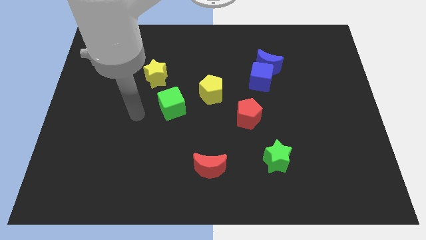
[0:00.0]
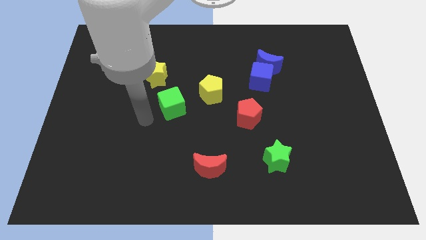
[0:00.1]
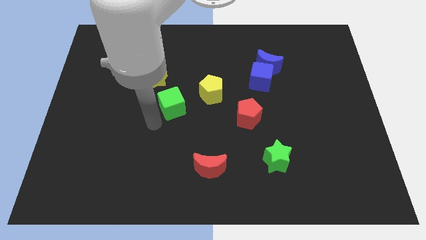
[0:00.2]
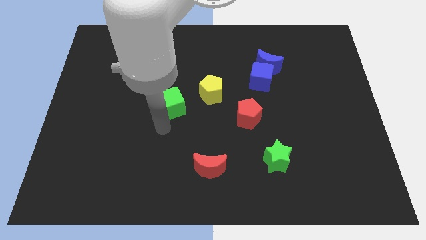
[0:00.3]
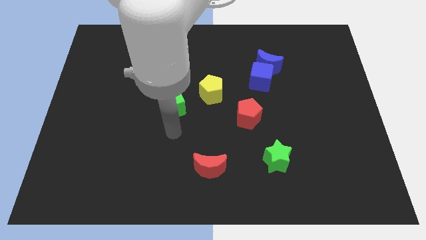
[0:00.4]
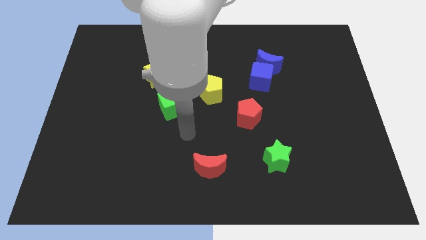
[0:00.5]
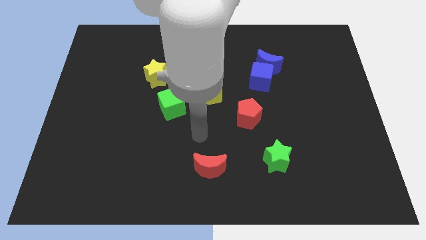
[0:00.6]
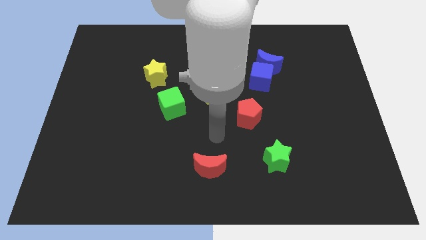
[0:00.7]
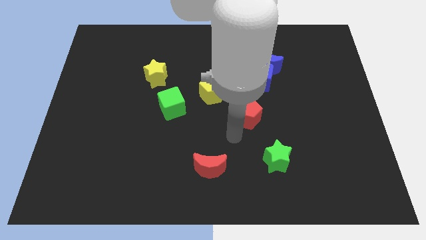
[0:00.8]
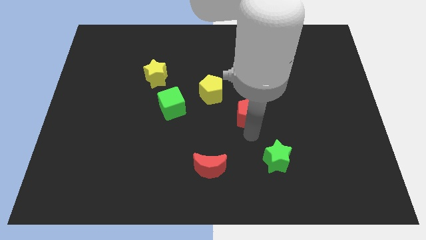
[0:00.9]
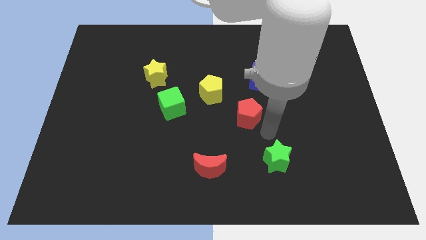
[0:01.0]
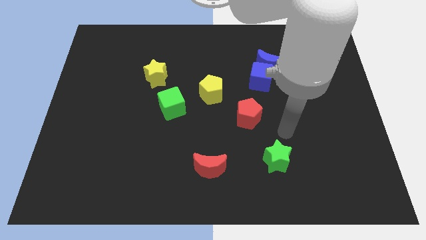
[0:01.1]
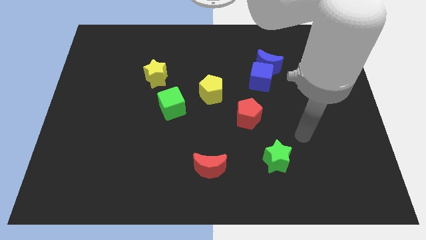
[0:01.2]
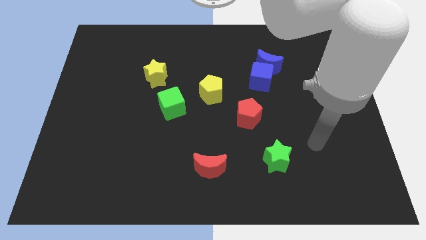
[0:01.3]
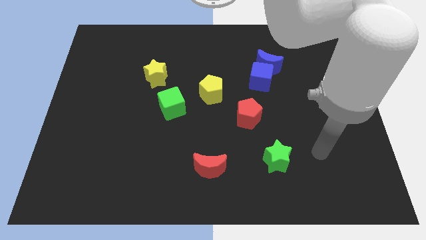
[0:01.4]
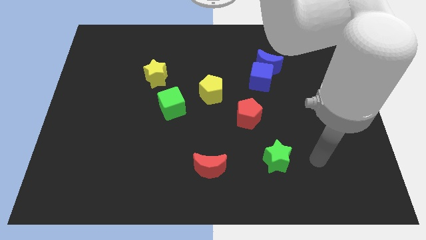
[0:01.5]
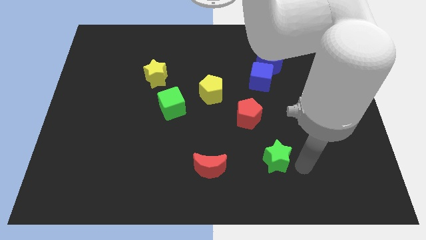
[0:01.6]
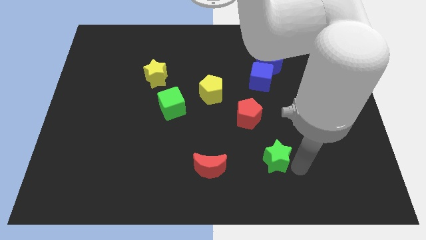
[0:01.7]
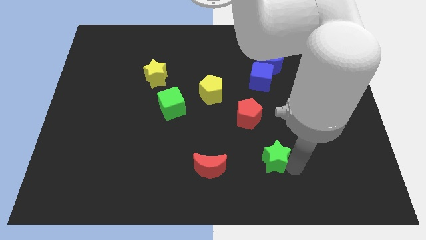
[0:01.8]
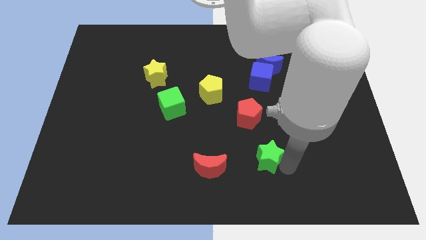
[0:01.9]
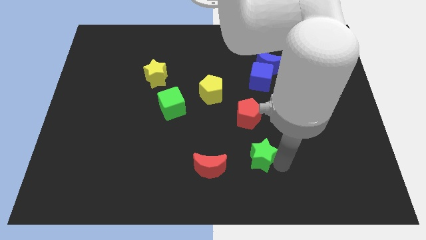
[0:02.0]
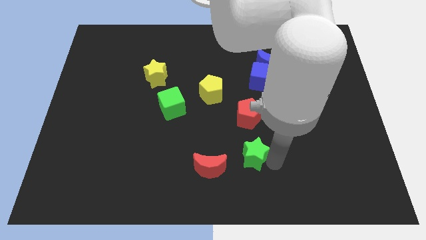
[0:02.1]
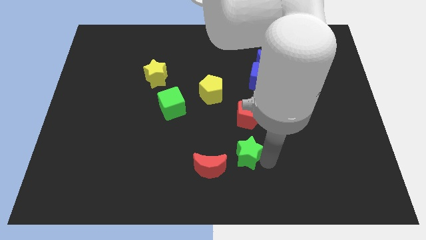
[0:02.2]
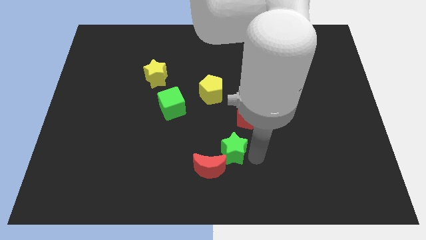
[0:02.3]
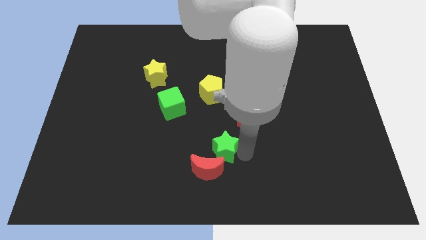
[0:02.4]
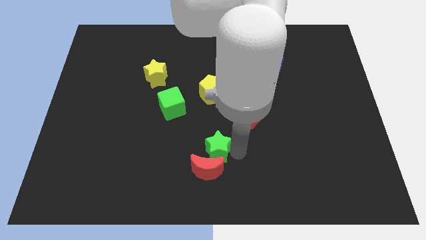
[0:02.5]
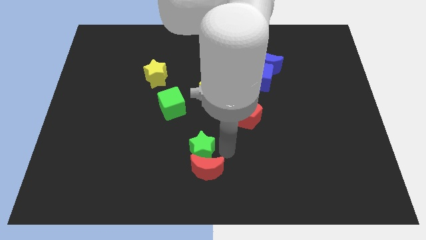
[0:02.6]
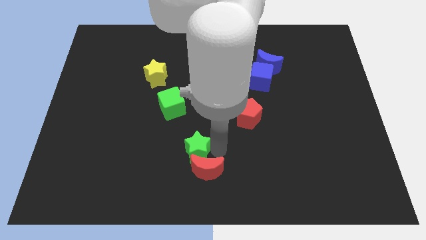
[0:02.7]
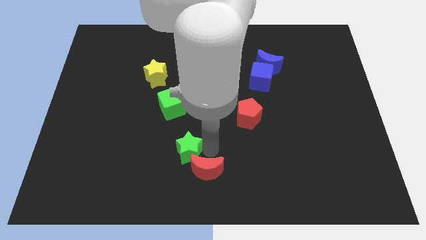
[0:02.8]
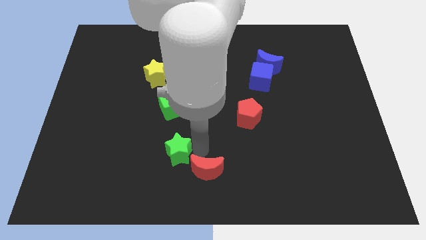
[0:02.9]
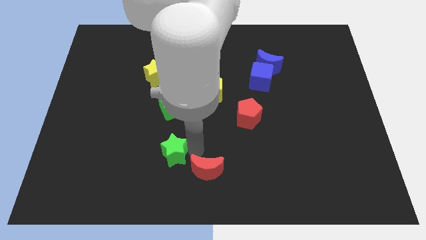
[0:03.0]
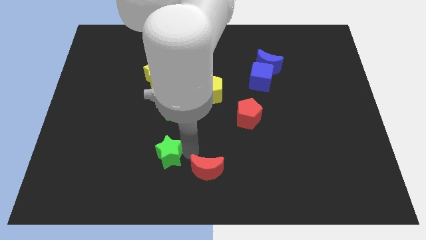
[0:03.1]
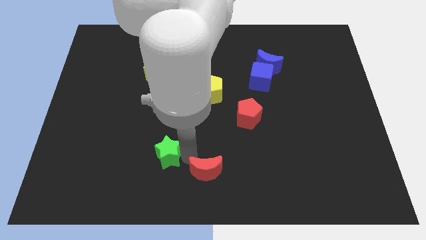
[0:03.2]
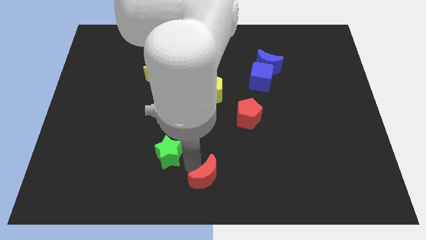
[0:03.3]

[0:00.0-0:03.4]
move the green star slightly to the left of the board

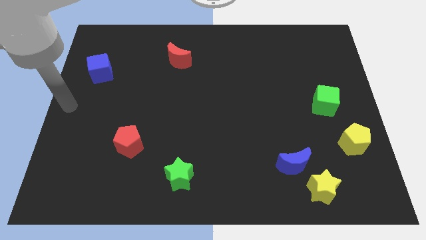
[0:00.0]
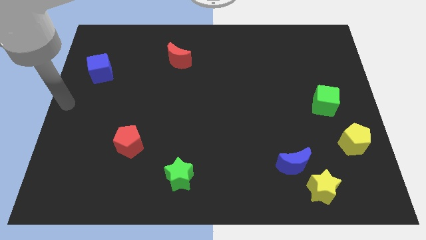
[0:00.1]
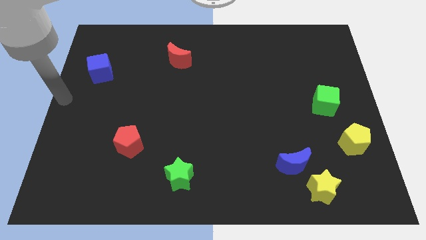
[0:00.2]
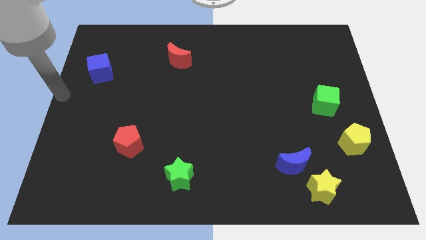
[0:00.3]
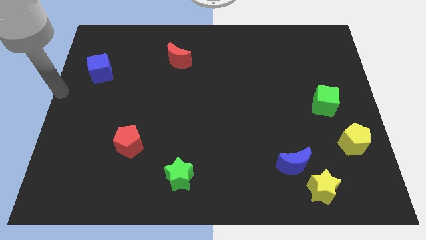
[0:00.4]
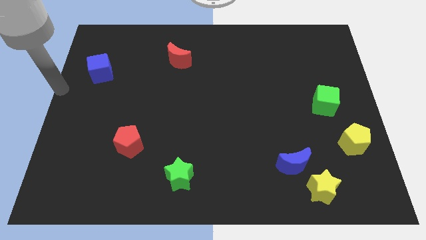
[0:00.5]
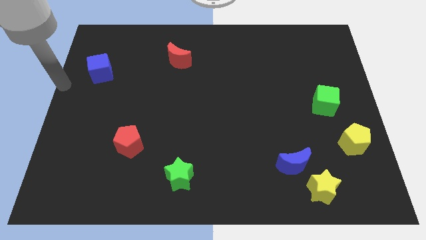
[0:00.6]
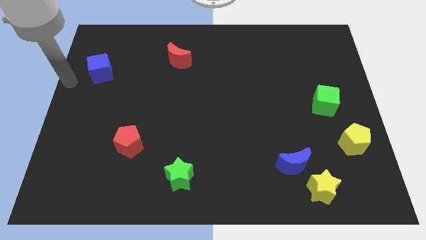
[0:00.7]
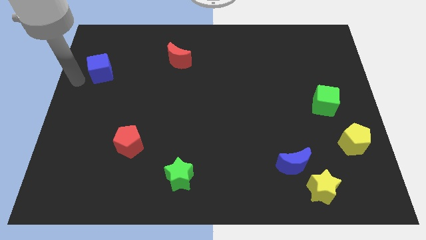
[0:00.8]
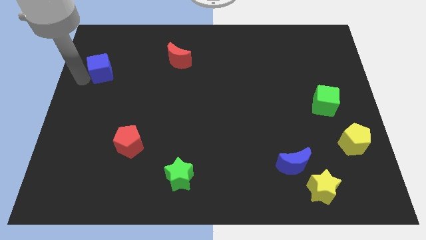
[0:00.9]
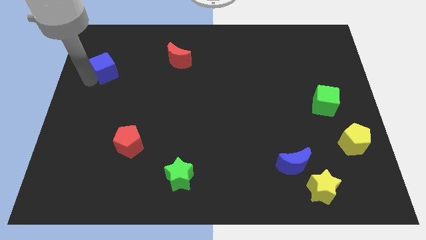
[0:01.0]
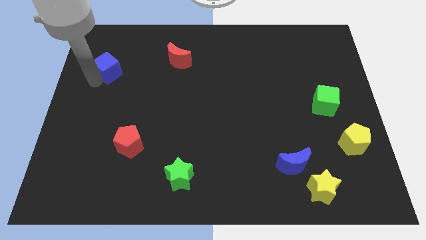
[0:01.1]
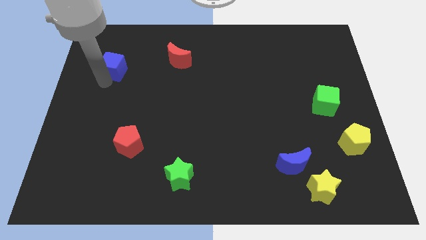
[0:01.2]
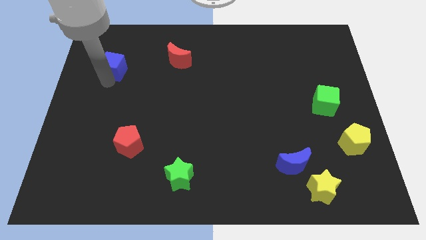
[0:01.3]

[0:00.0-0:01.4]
push the blue cube towards the right side of the board

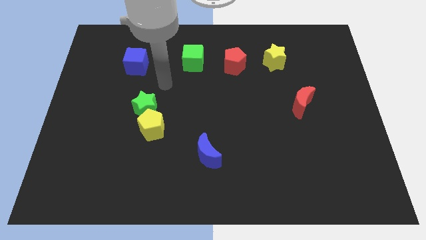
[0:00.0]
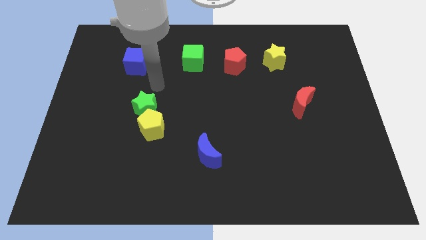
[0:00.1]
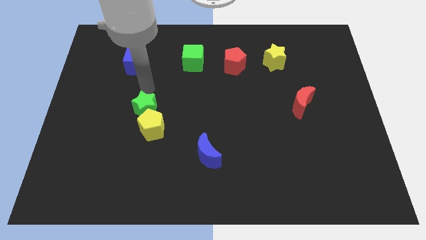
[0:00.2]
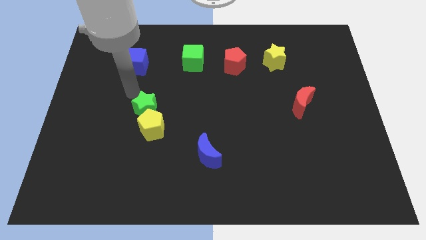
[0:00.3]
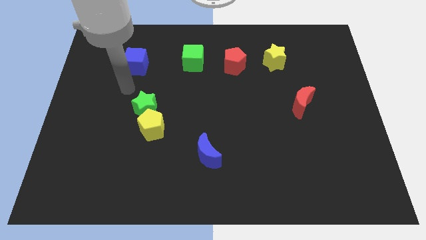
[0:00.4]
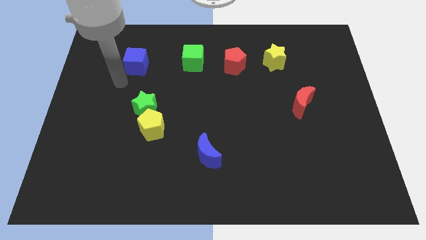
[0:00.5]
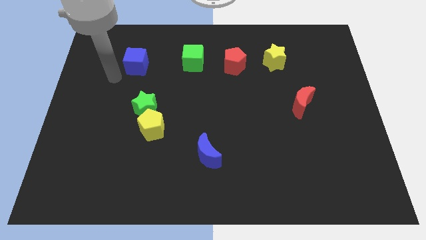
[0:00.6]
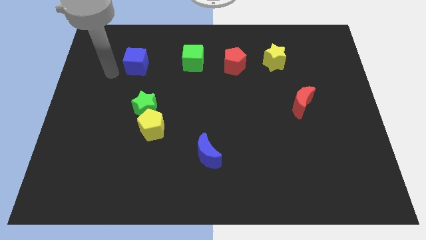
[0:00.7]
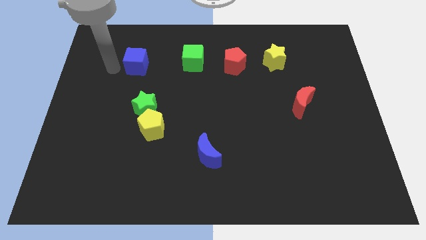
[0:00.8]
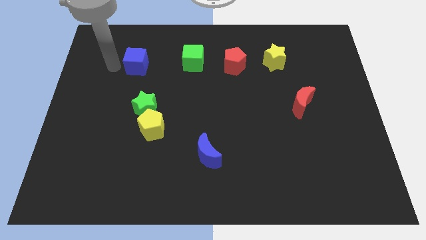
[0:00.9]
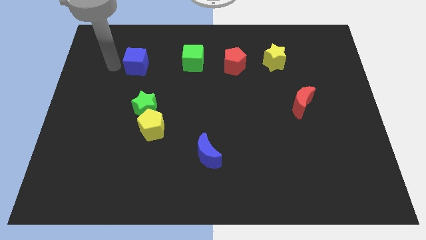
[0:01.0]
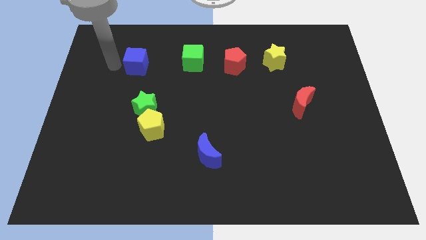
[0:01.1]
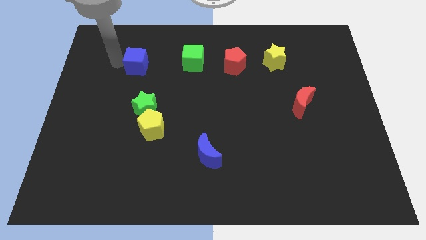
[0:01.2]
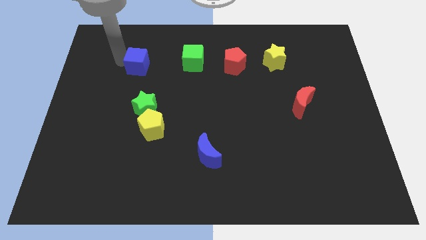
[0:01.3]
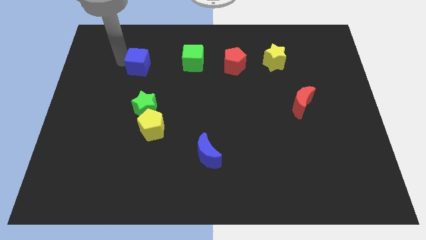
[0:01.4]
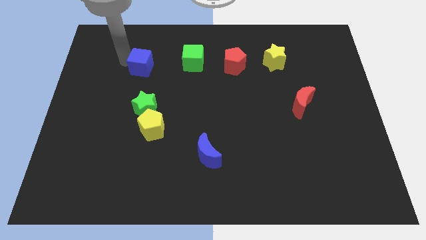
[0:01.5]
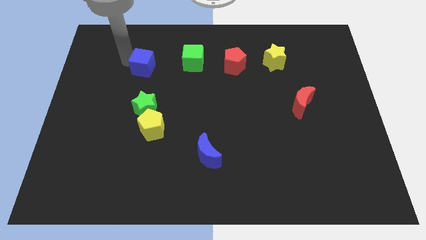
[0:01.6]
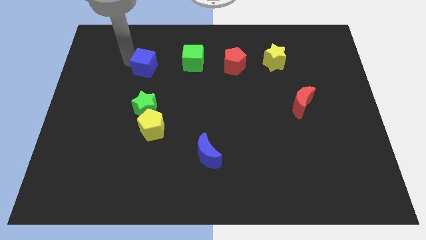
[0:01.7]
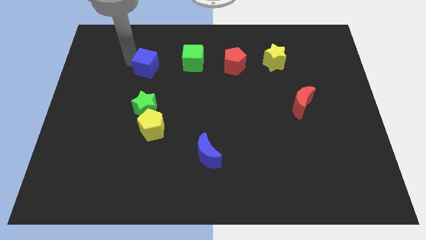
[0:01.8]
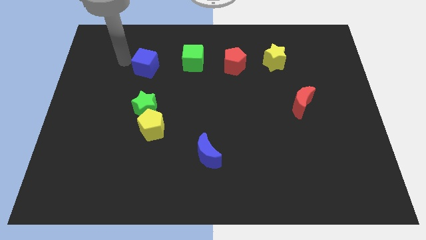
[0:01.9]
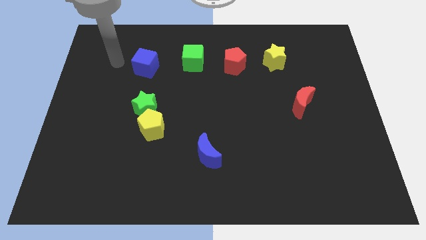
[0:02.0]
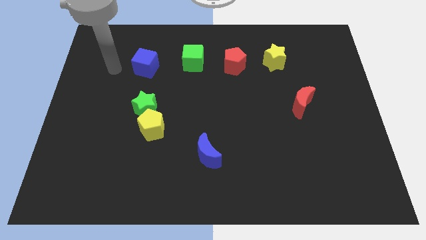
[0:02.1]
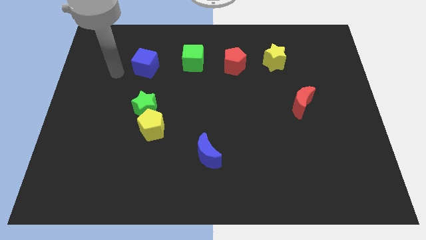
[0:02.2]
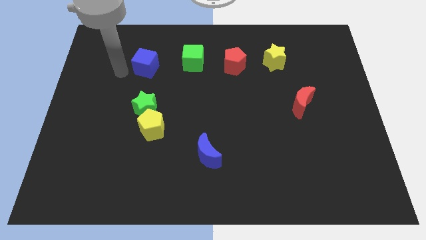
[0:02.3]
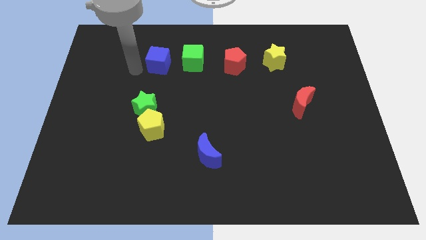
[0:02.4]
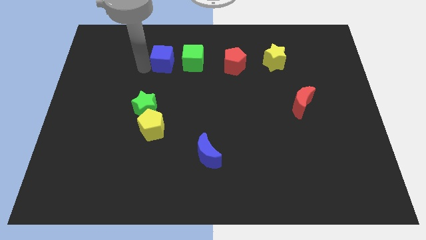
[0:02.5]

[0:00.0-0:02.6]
move blue cube towards green cube

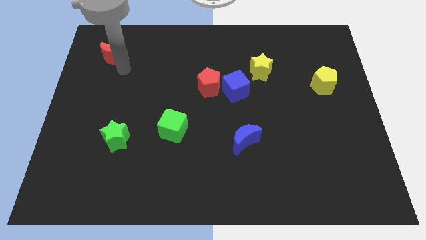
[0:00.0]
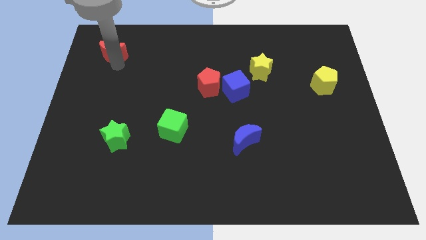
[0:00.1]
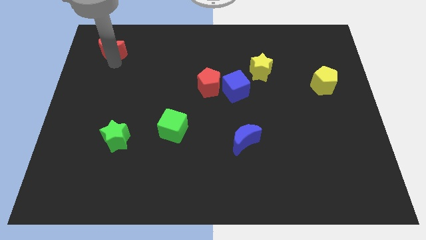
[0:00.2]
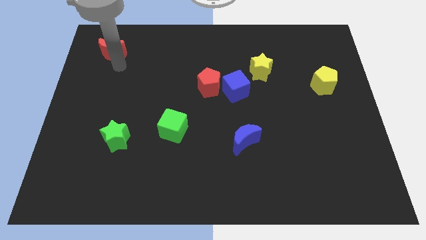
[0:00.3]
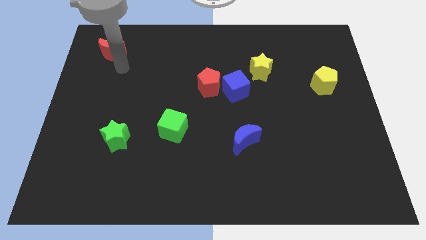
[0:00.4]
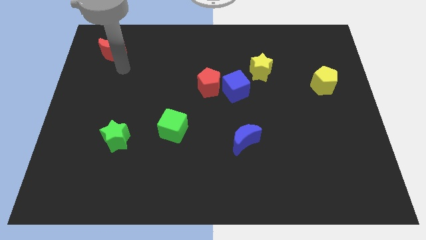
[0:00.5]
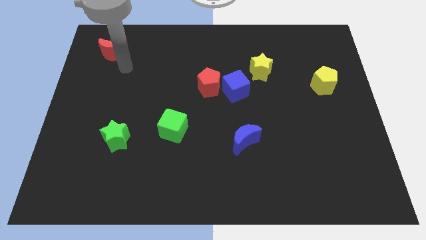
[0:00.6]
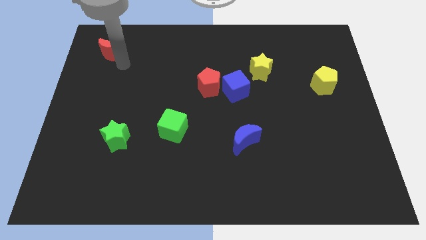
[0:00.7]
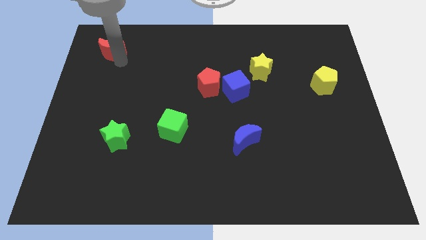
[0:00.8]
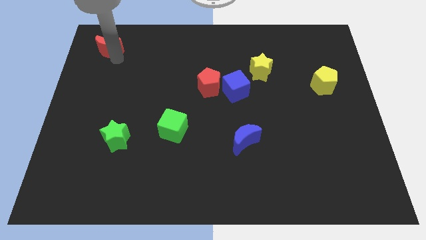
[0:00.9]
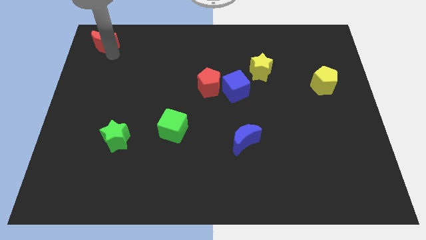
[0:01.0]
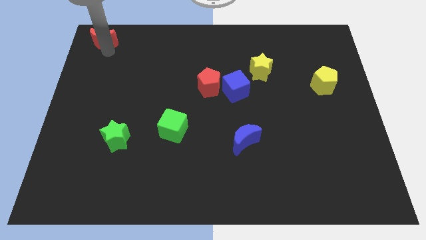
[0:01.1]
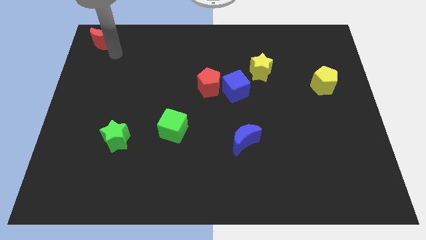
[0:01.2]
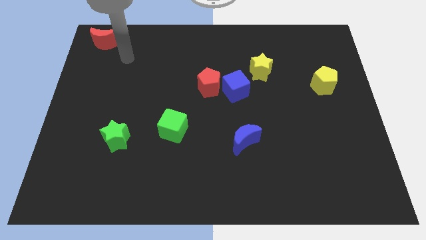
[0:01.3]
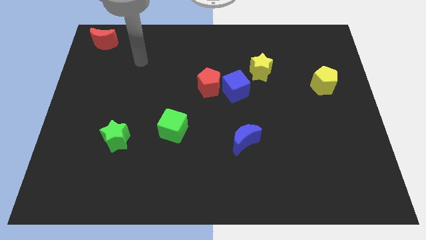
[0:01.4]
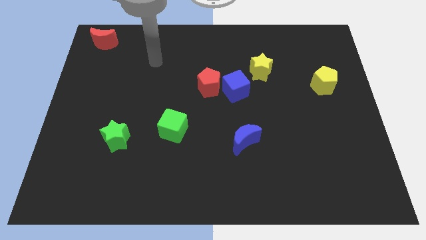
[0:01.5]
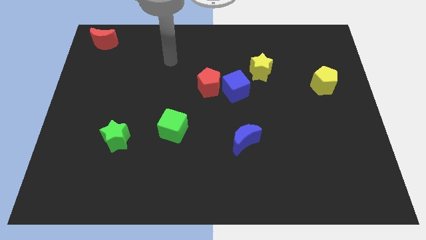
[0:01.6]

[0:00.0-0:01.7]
place the red moon at the top left side of the board
